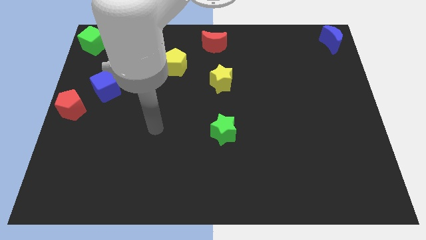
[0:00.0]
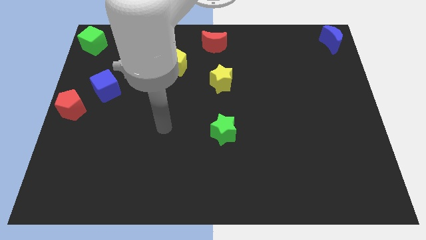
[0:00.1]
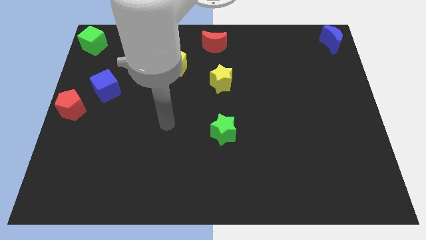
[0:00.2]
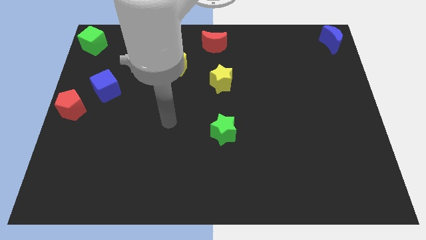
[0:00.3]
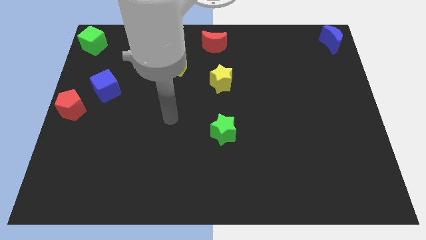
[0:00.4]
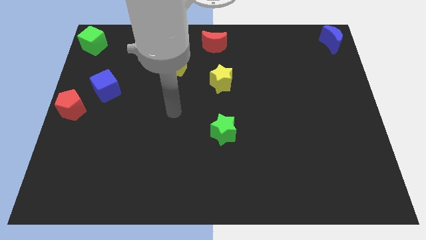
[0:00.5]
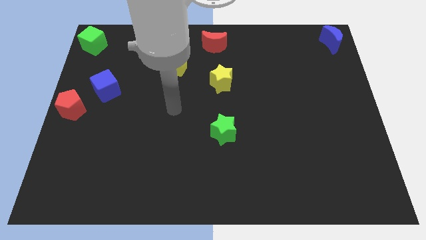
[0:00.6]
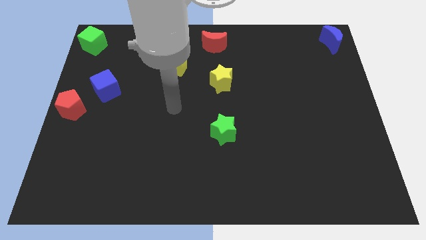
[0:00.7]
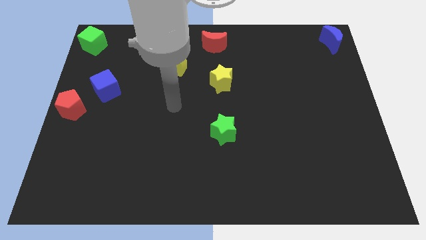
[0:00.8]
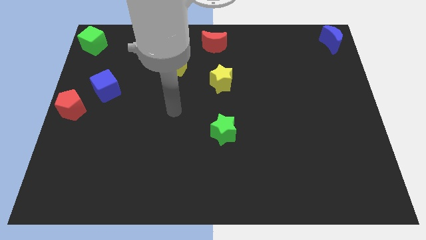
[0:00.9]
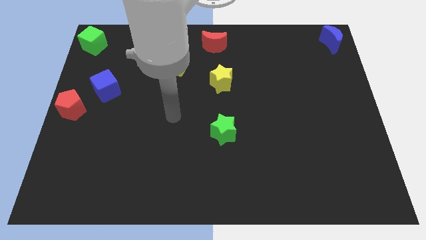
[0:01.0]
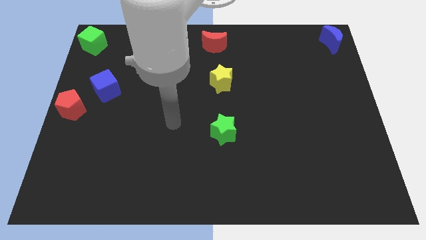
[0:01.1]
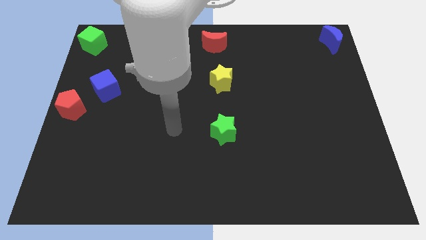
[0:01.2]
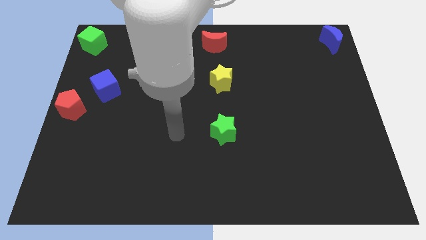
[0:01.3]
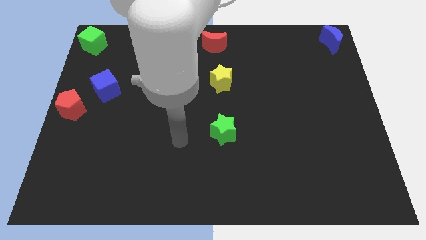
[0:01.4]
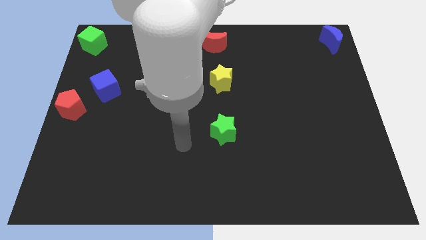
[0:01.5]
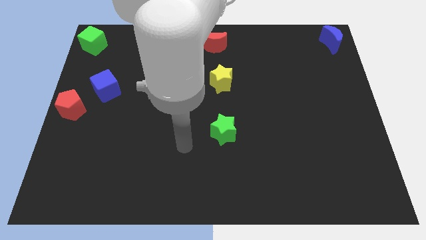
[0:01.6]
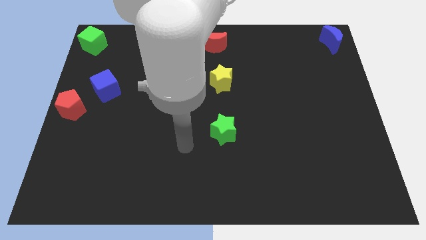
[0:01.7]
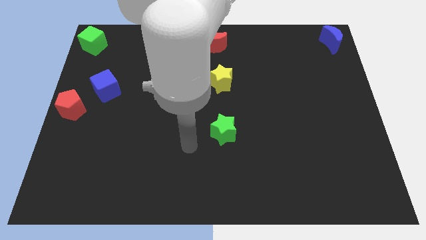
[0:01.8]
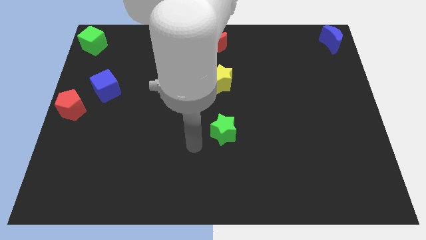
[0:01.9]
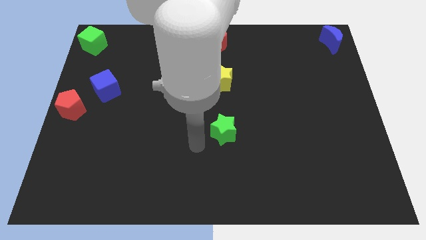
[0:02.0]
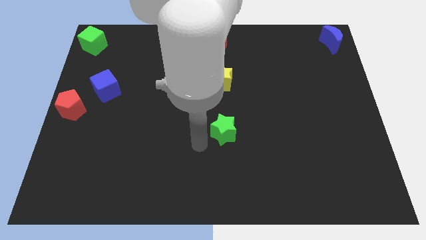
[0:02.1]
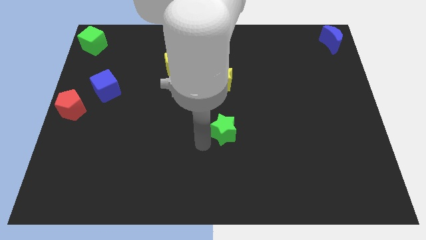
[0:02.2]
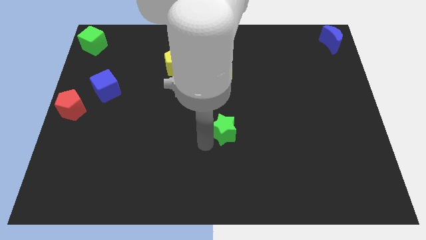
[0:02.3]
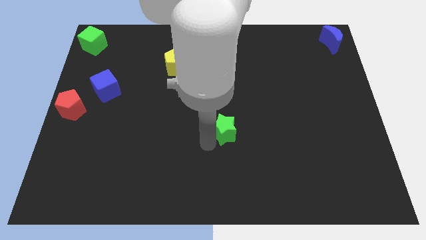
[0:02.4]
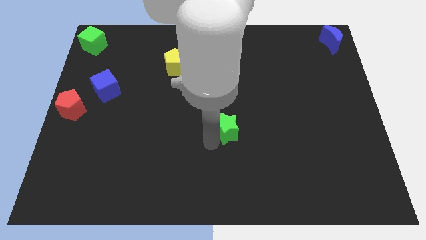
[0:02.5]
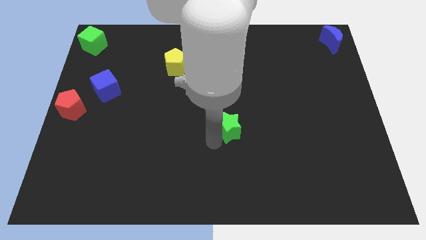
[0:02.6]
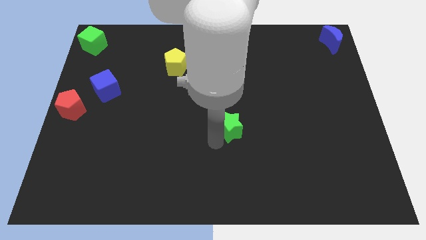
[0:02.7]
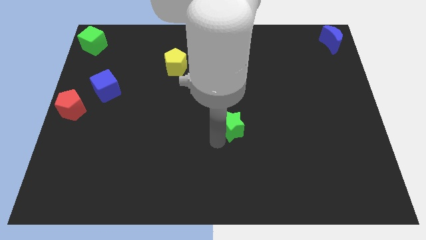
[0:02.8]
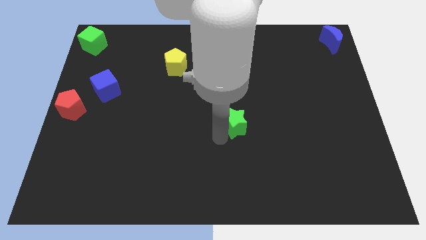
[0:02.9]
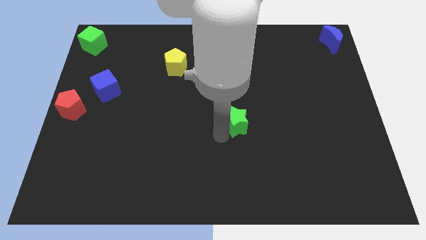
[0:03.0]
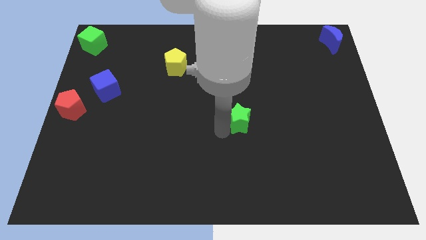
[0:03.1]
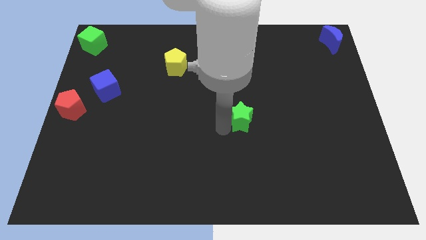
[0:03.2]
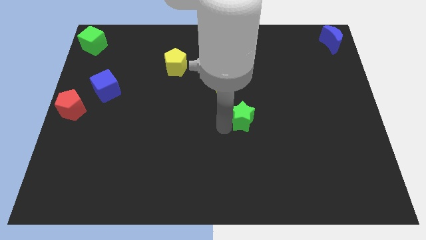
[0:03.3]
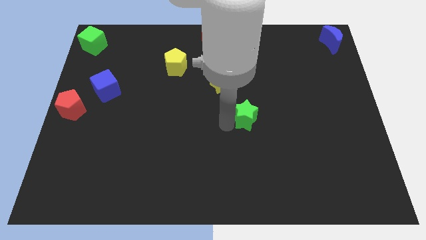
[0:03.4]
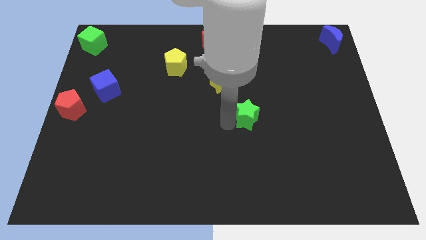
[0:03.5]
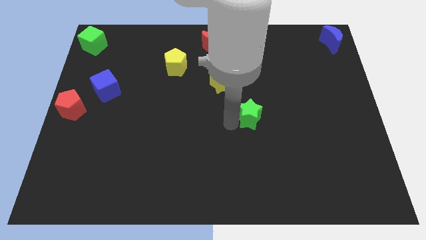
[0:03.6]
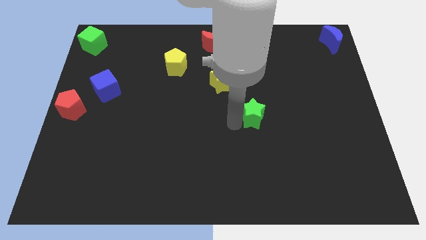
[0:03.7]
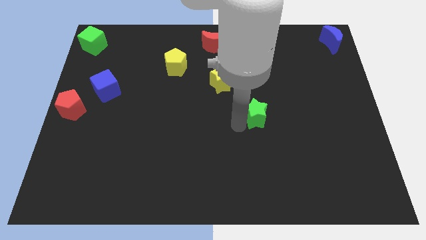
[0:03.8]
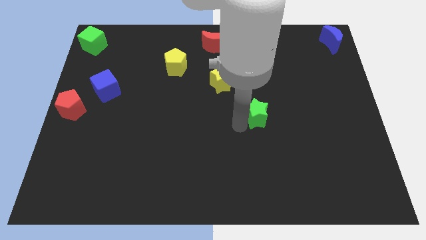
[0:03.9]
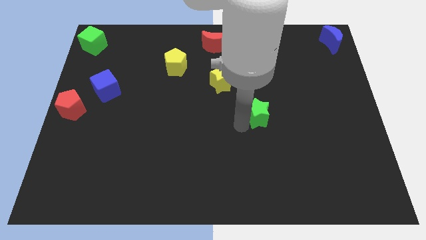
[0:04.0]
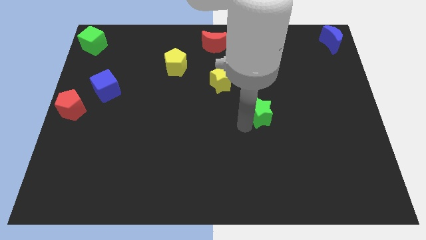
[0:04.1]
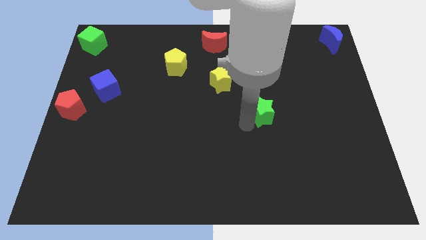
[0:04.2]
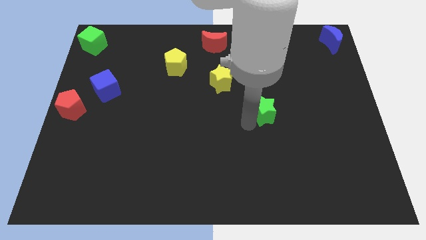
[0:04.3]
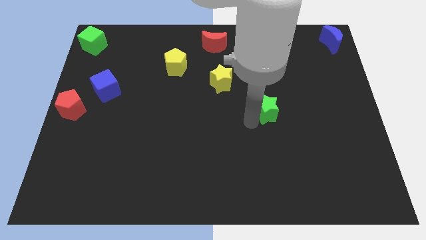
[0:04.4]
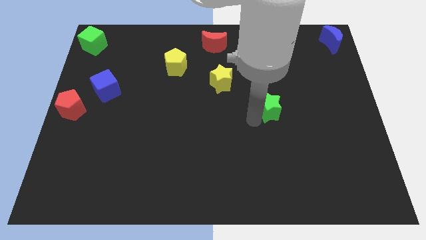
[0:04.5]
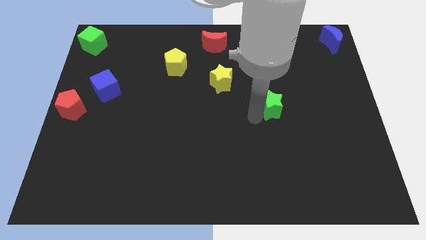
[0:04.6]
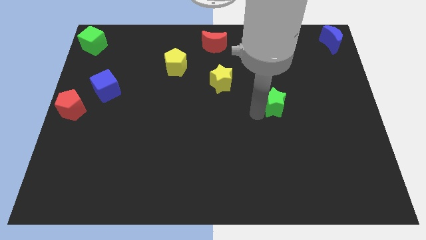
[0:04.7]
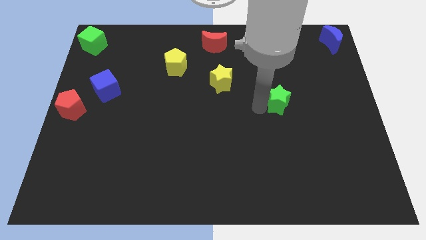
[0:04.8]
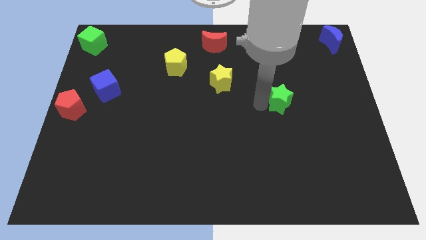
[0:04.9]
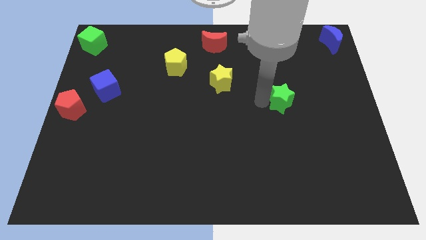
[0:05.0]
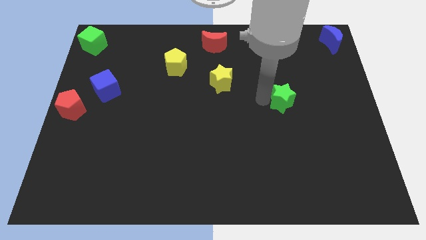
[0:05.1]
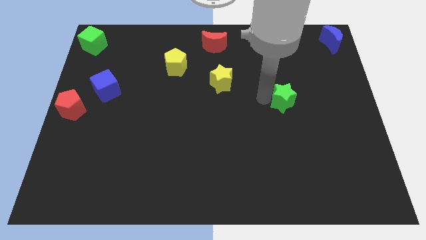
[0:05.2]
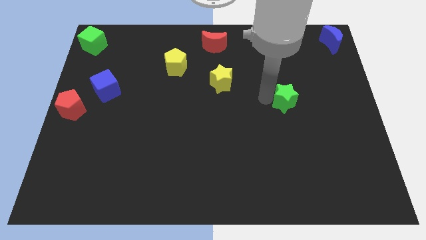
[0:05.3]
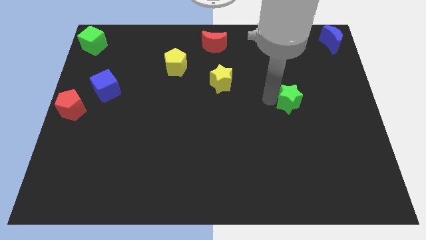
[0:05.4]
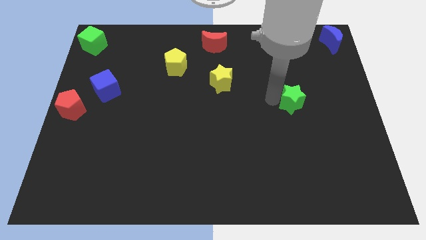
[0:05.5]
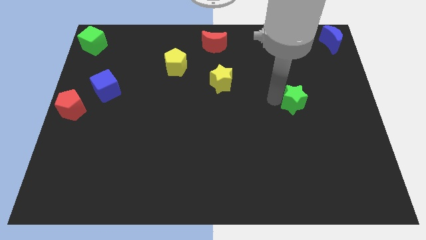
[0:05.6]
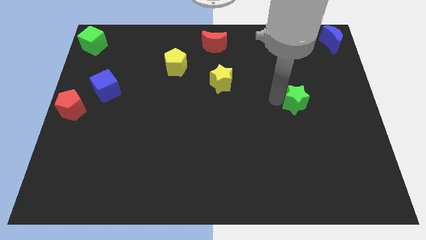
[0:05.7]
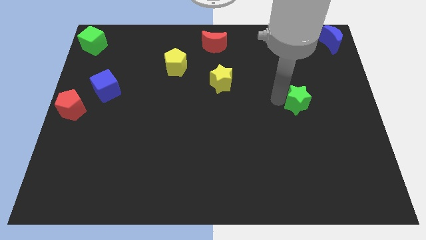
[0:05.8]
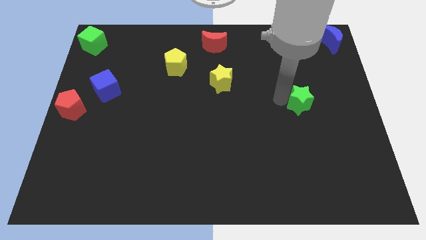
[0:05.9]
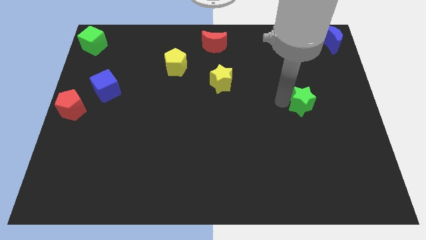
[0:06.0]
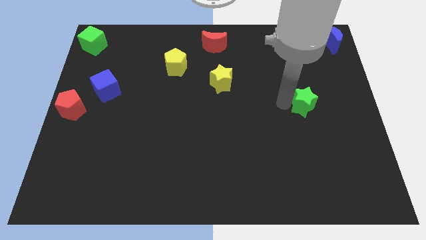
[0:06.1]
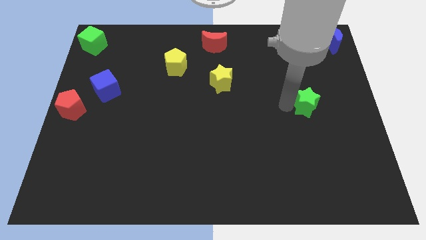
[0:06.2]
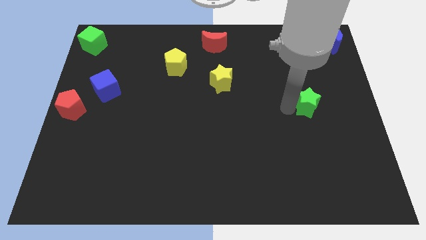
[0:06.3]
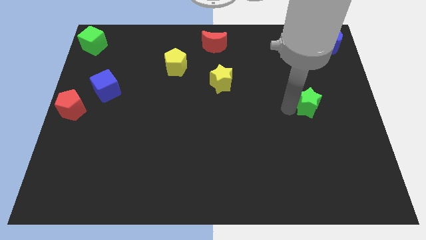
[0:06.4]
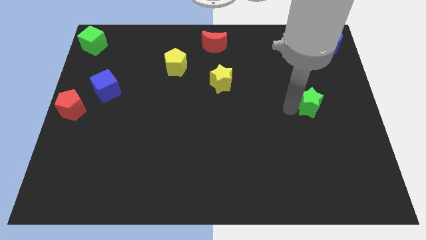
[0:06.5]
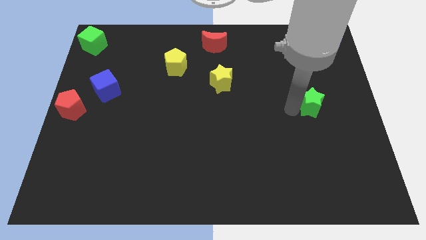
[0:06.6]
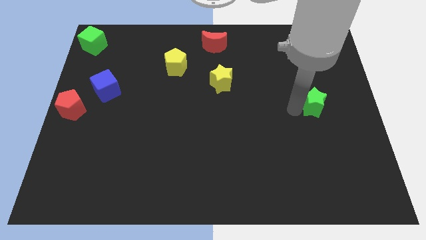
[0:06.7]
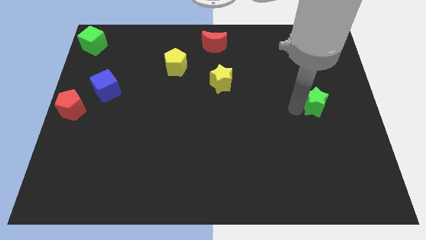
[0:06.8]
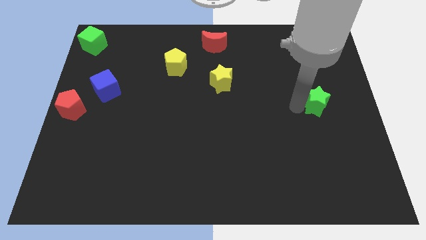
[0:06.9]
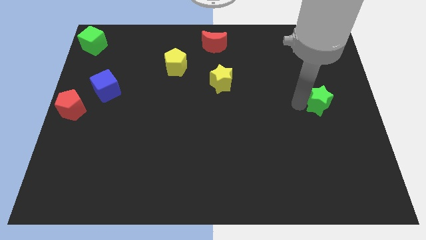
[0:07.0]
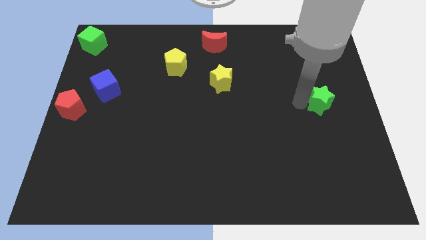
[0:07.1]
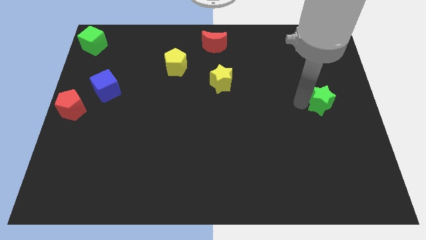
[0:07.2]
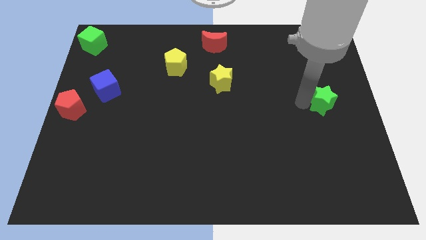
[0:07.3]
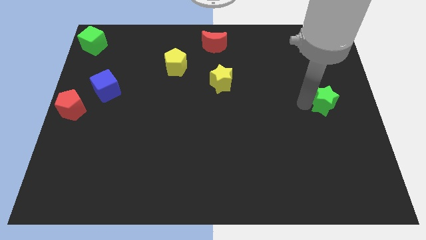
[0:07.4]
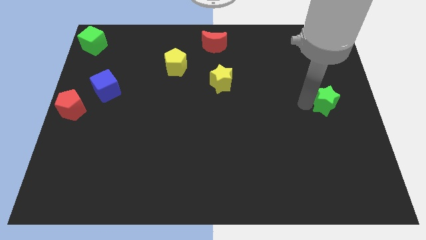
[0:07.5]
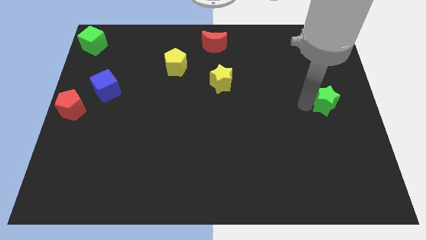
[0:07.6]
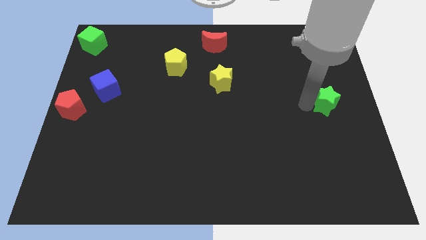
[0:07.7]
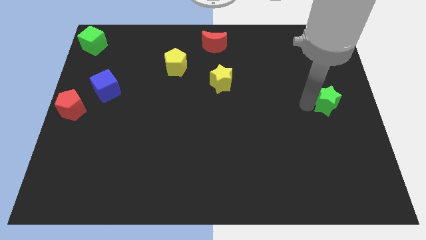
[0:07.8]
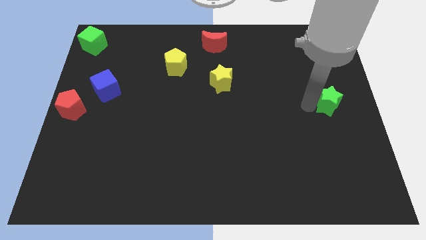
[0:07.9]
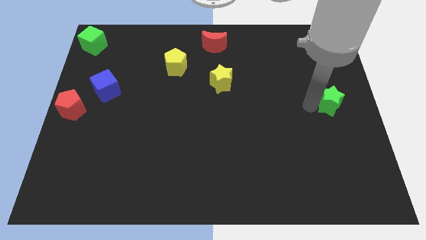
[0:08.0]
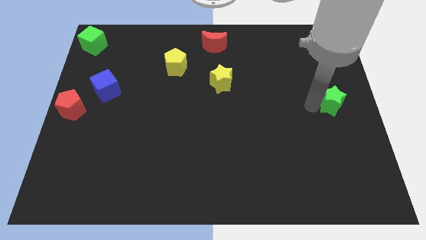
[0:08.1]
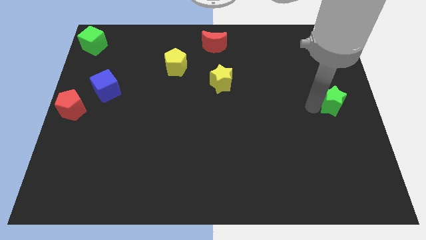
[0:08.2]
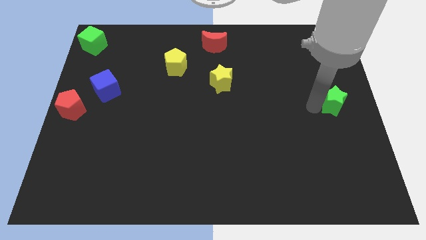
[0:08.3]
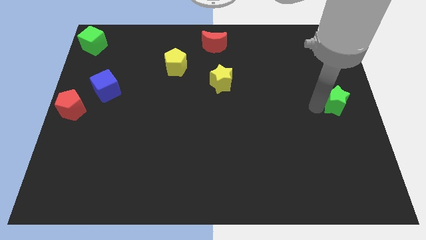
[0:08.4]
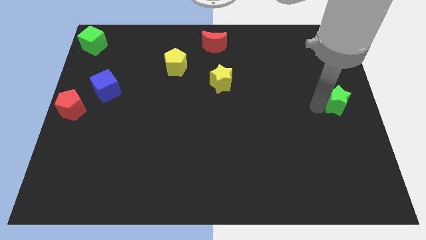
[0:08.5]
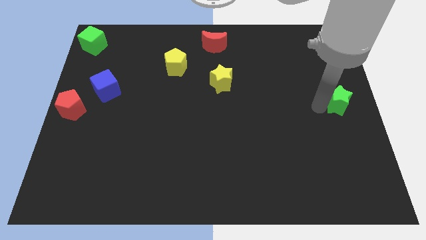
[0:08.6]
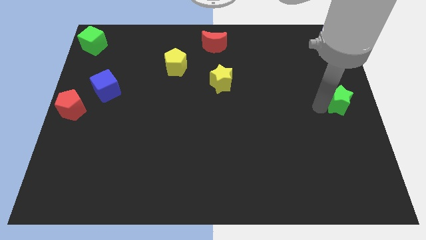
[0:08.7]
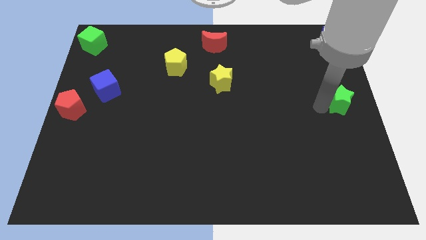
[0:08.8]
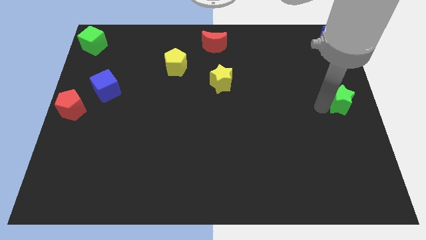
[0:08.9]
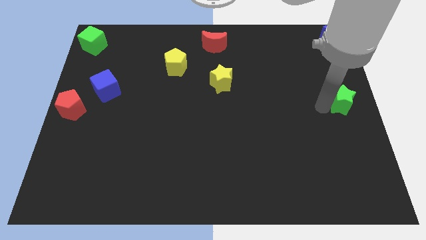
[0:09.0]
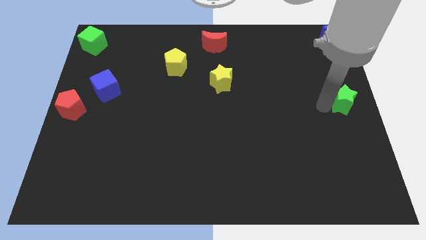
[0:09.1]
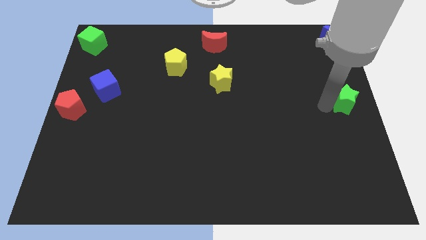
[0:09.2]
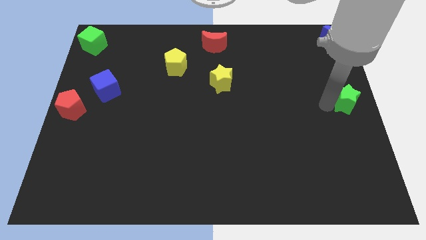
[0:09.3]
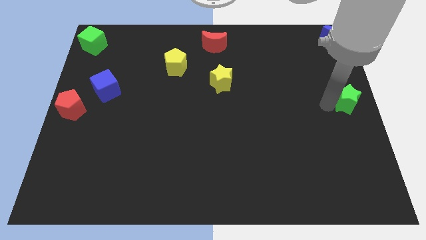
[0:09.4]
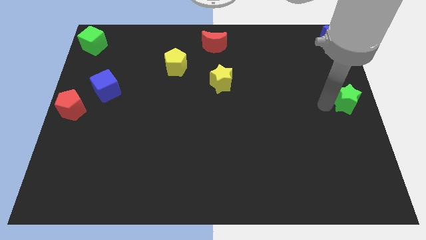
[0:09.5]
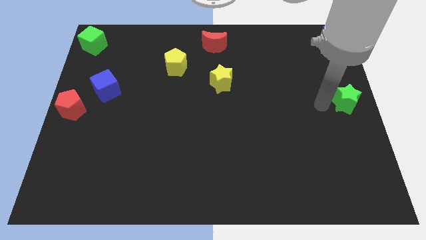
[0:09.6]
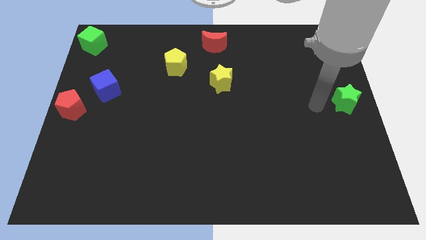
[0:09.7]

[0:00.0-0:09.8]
move the green star to the center right of the table
